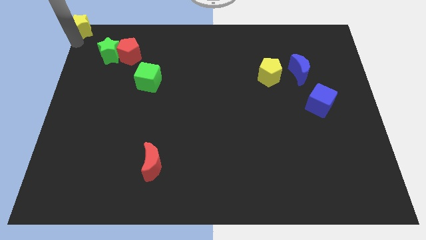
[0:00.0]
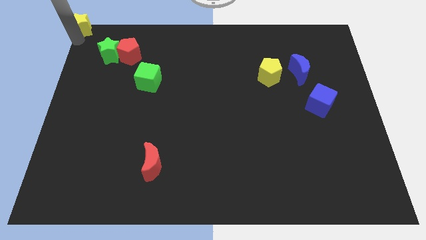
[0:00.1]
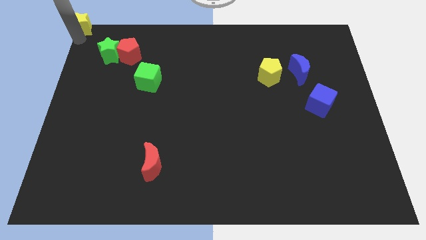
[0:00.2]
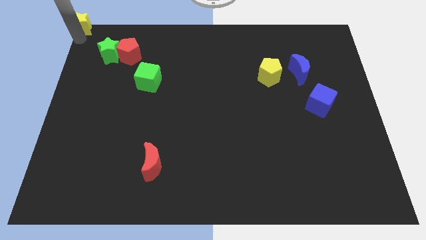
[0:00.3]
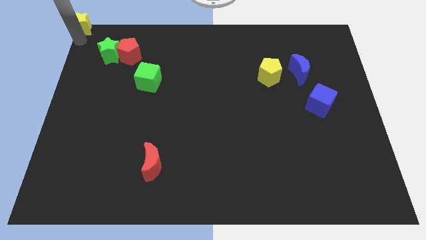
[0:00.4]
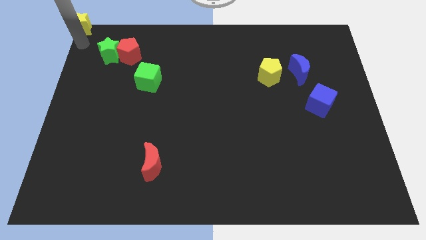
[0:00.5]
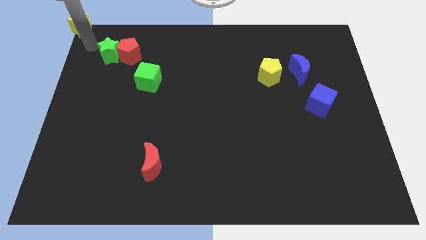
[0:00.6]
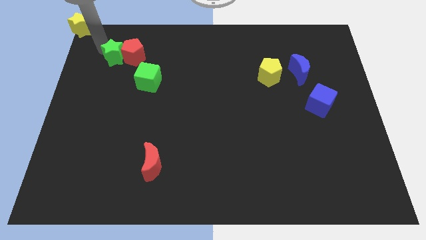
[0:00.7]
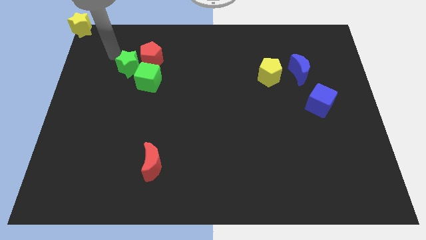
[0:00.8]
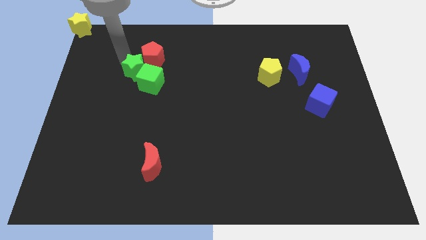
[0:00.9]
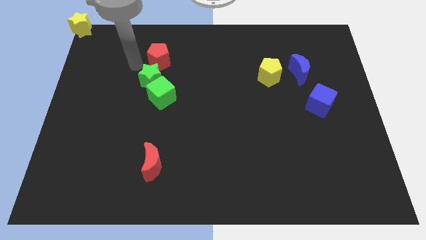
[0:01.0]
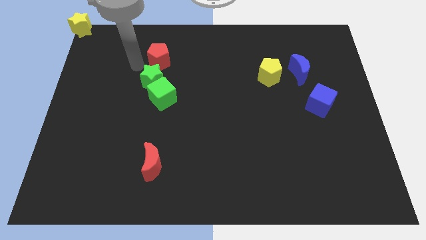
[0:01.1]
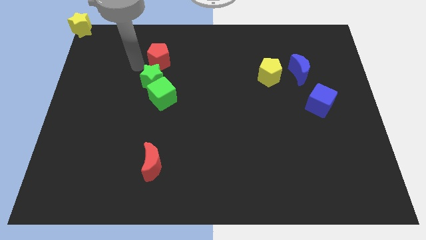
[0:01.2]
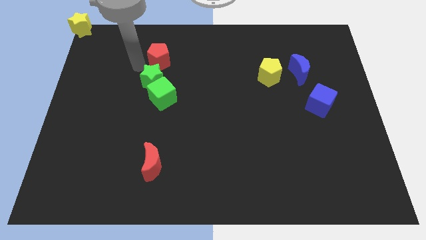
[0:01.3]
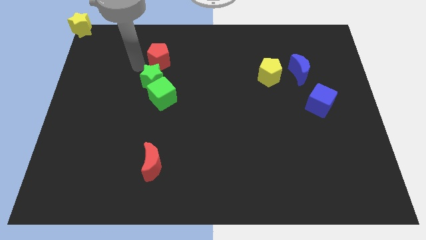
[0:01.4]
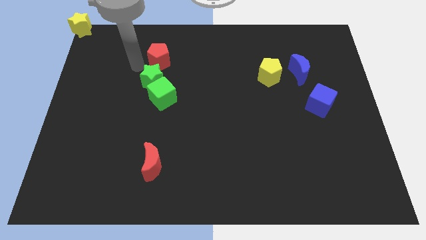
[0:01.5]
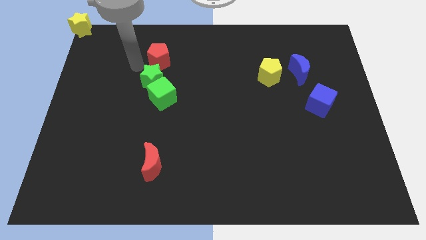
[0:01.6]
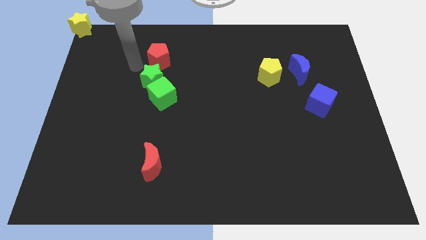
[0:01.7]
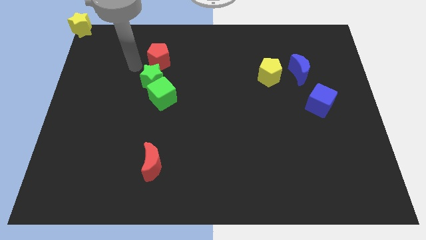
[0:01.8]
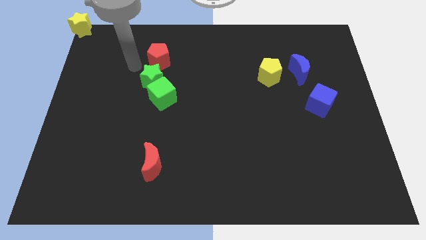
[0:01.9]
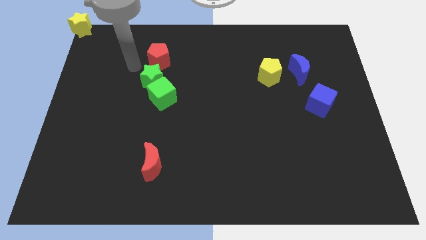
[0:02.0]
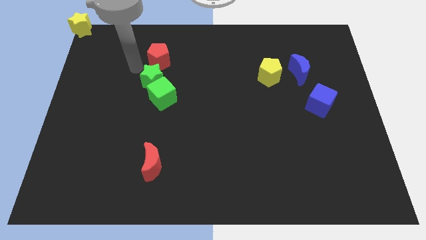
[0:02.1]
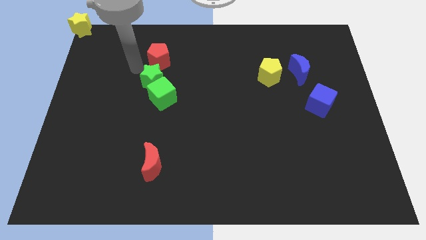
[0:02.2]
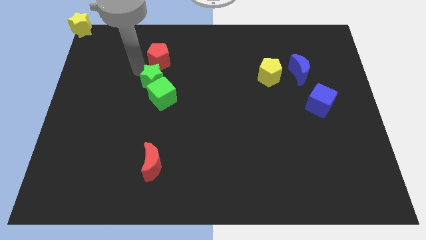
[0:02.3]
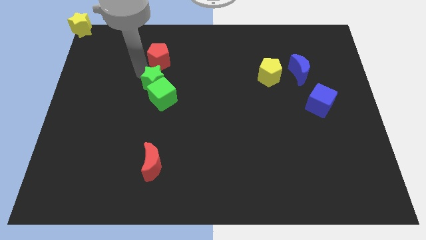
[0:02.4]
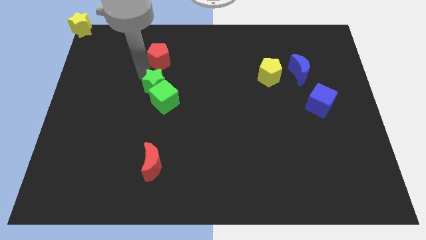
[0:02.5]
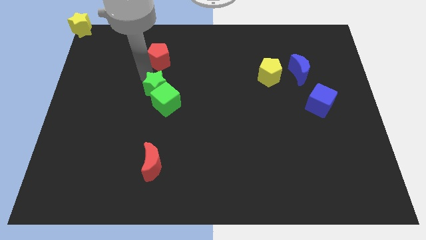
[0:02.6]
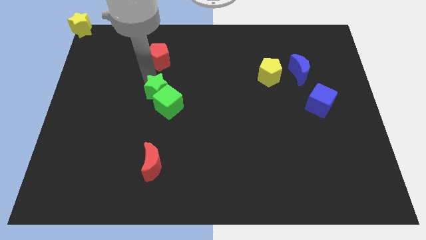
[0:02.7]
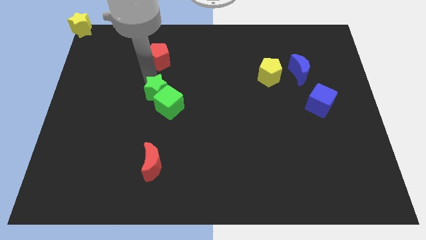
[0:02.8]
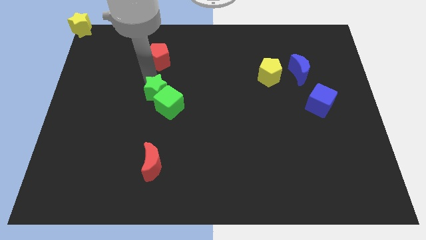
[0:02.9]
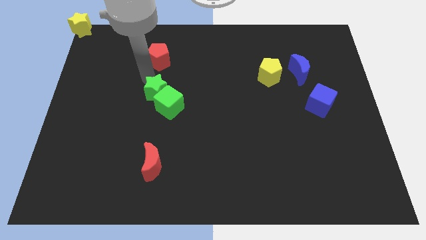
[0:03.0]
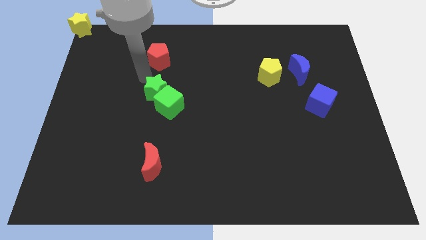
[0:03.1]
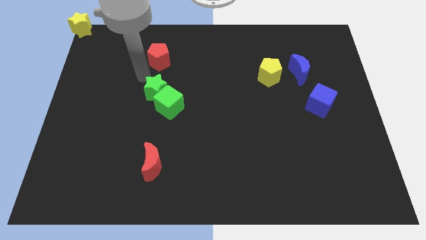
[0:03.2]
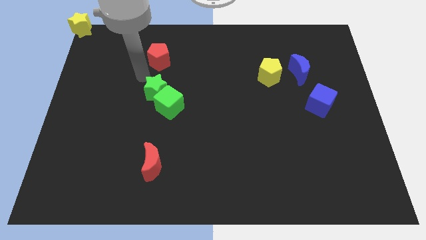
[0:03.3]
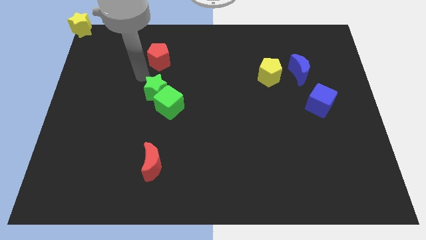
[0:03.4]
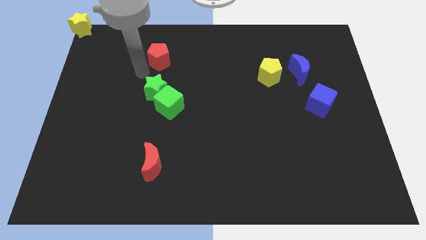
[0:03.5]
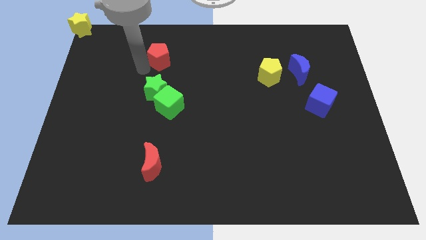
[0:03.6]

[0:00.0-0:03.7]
push the green star towards red pentagon

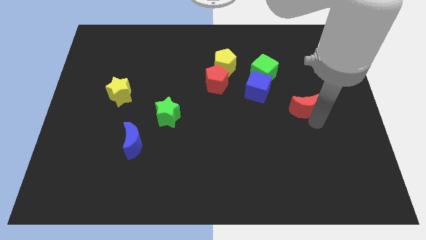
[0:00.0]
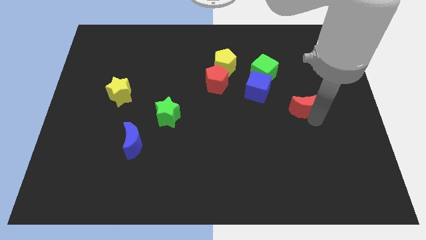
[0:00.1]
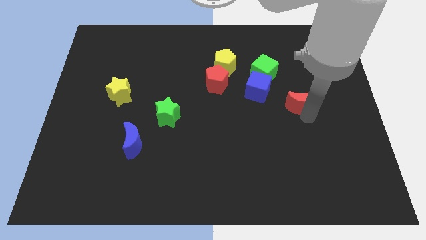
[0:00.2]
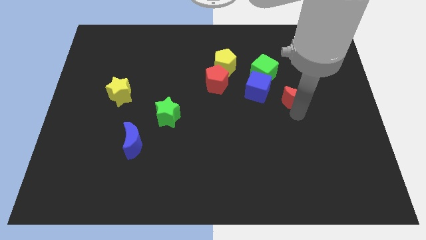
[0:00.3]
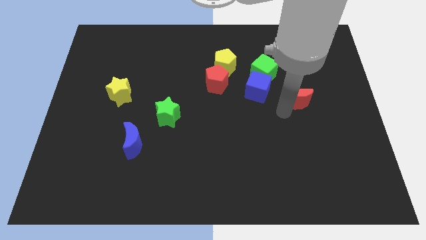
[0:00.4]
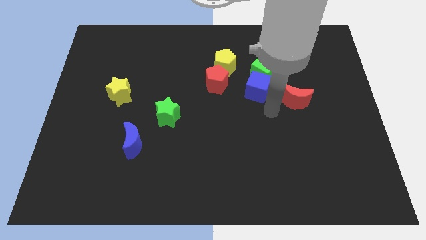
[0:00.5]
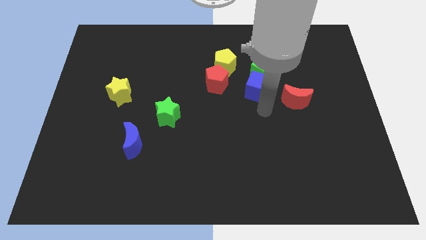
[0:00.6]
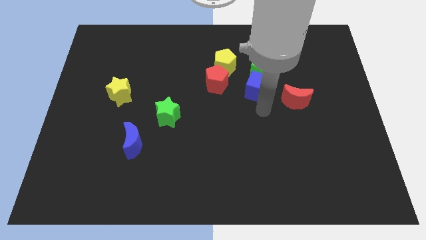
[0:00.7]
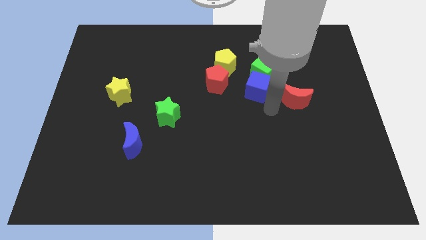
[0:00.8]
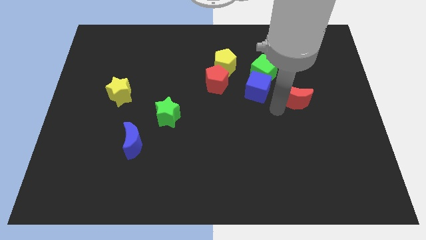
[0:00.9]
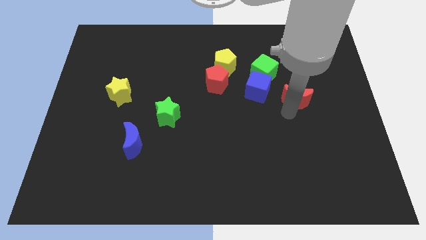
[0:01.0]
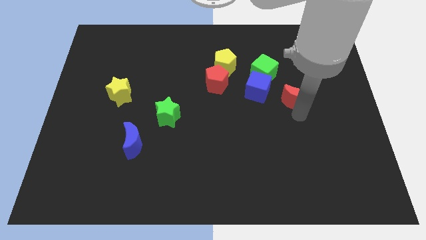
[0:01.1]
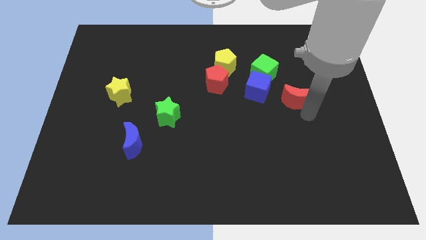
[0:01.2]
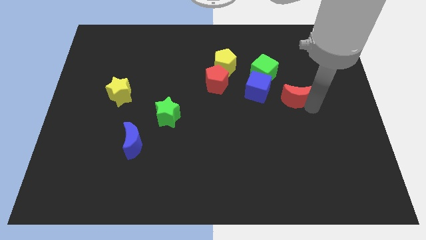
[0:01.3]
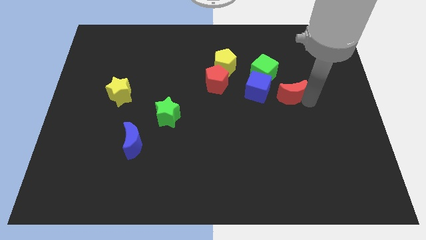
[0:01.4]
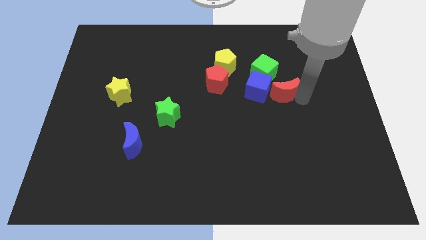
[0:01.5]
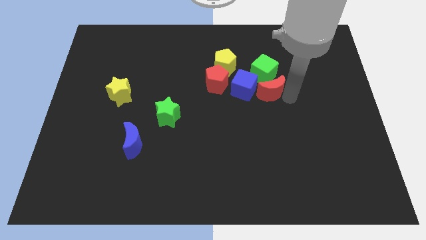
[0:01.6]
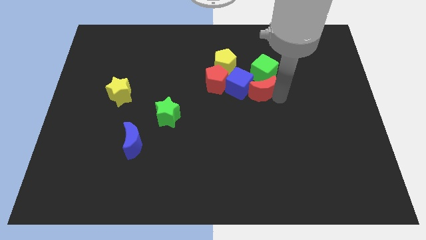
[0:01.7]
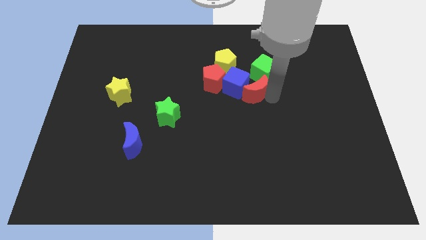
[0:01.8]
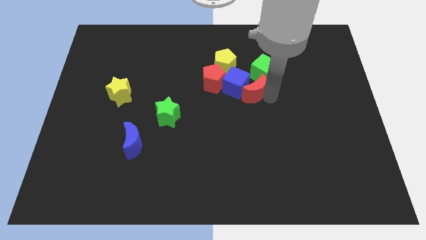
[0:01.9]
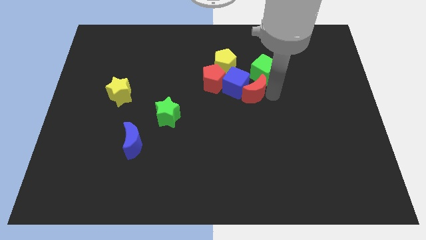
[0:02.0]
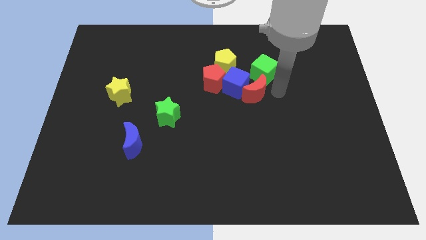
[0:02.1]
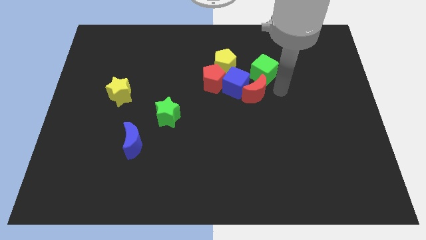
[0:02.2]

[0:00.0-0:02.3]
push the red moon into the blue cube

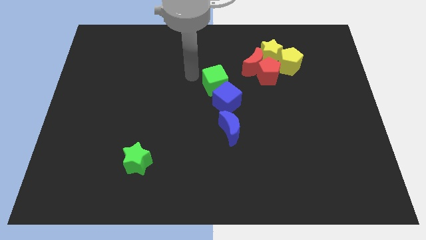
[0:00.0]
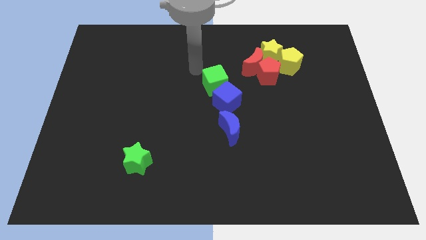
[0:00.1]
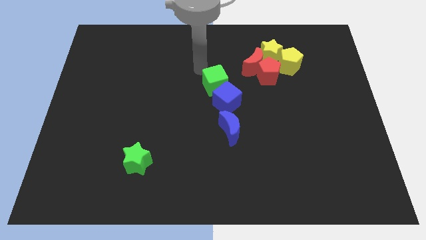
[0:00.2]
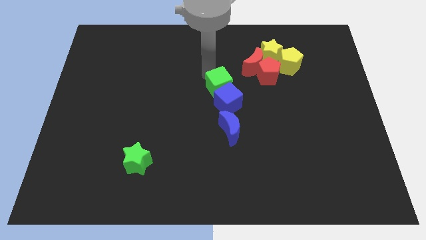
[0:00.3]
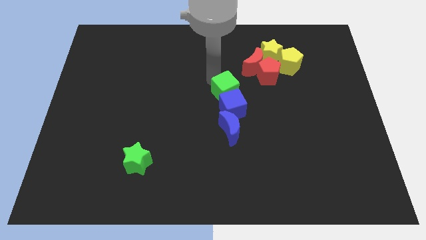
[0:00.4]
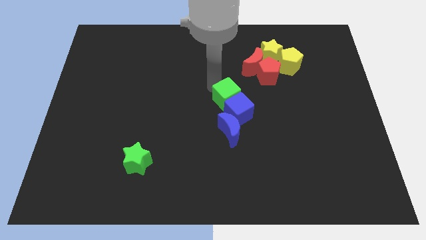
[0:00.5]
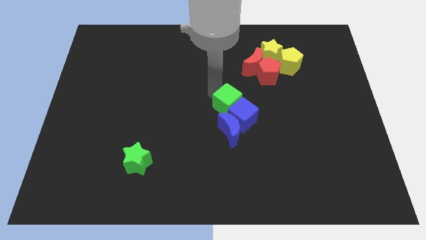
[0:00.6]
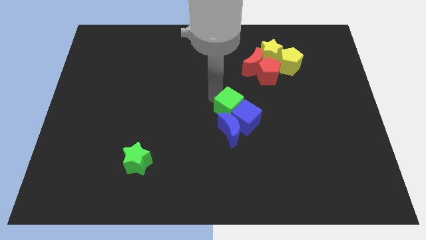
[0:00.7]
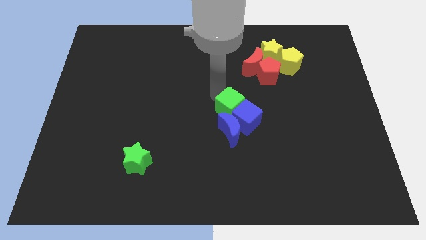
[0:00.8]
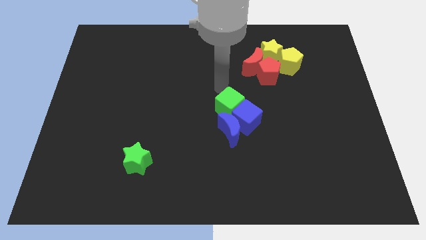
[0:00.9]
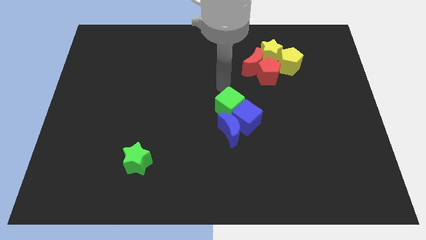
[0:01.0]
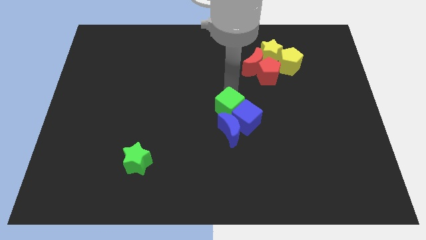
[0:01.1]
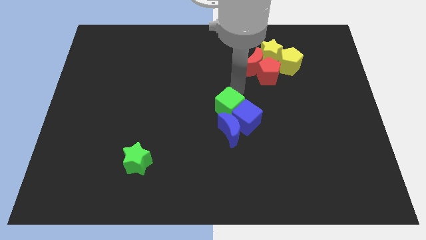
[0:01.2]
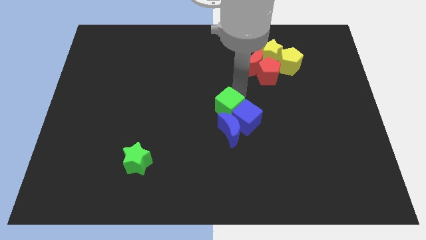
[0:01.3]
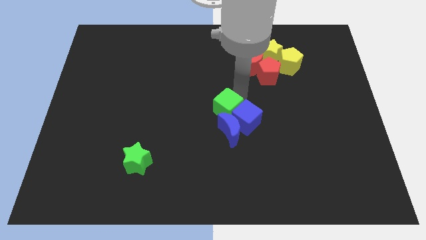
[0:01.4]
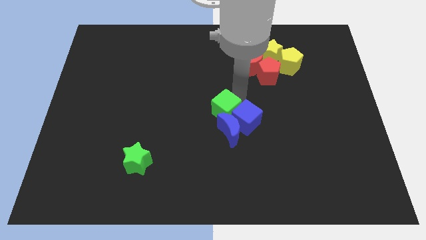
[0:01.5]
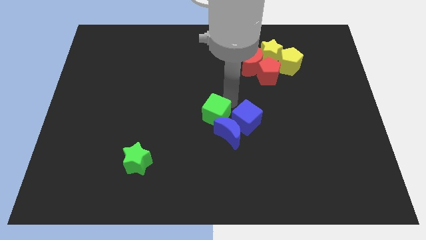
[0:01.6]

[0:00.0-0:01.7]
move the cubes to the right of the blue moon

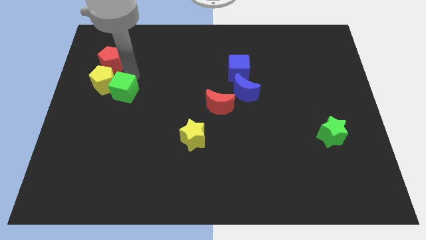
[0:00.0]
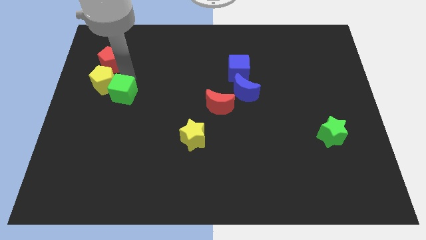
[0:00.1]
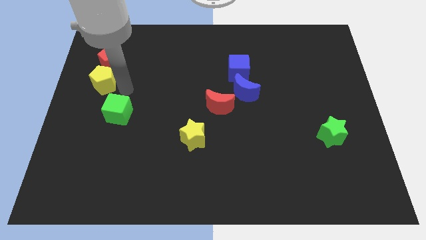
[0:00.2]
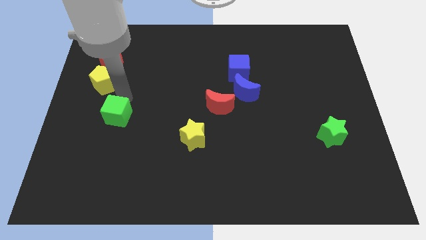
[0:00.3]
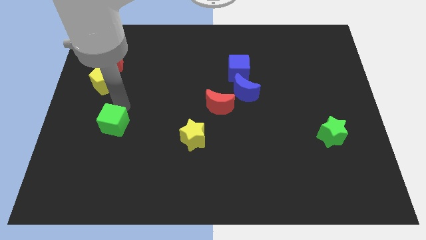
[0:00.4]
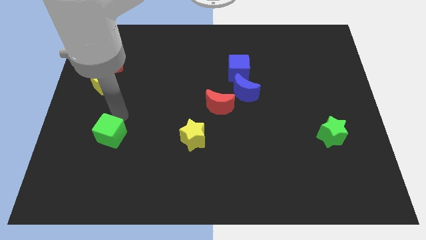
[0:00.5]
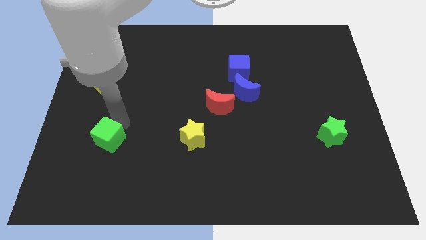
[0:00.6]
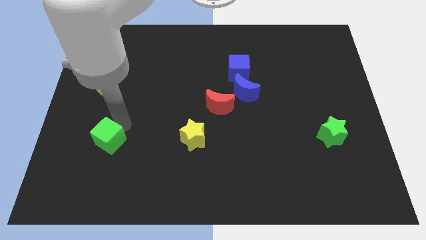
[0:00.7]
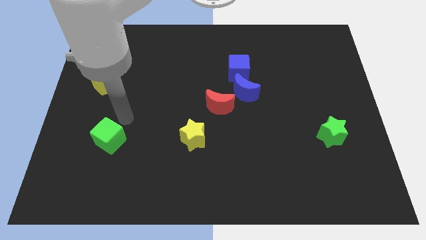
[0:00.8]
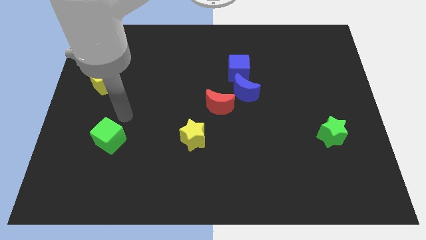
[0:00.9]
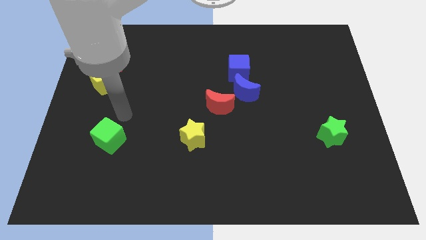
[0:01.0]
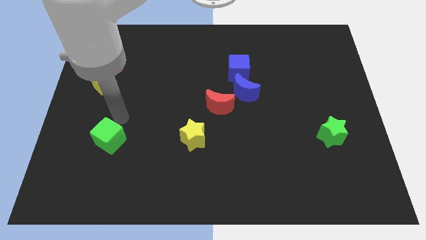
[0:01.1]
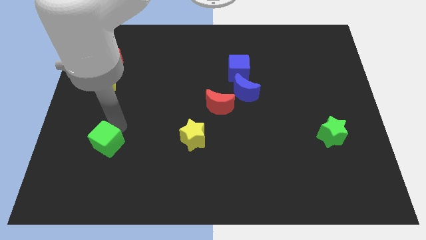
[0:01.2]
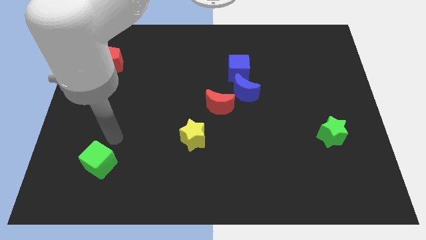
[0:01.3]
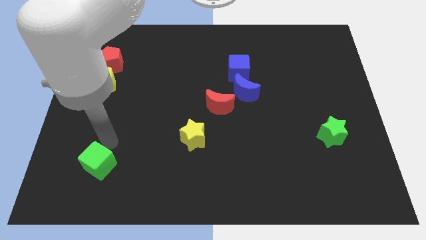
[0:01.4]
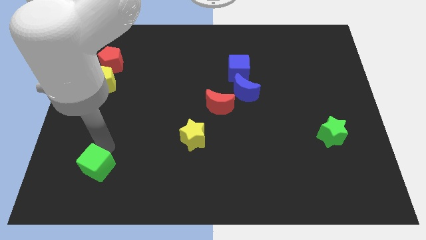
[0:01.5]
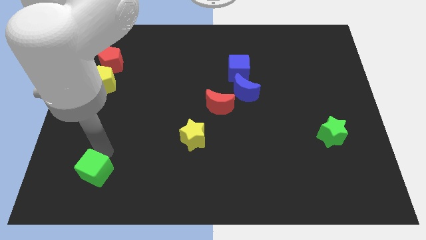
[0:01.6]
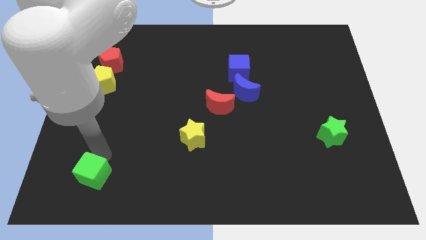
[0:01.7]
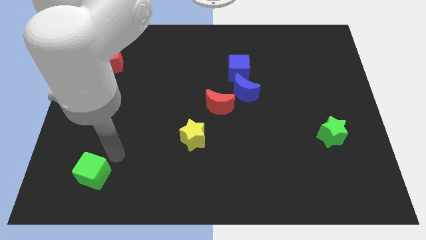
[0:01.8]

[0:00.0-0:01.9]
push the green cube towards the bottom left
